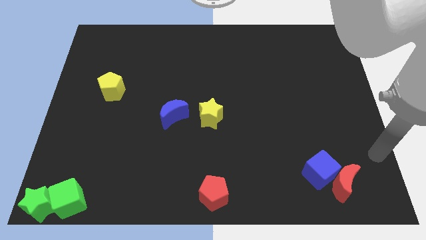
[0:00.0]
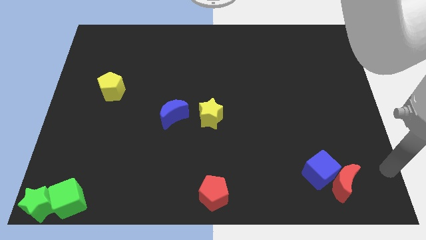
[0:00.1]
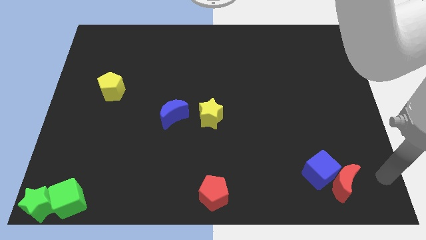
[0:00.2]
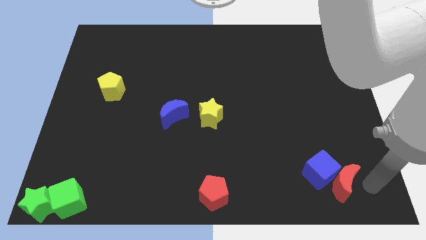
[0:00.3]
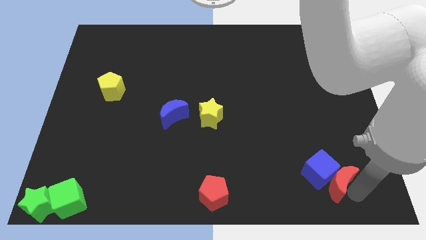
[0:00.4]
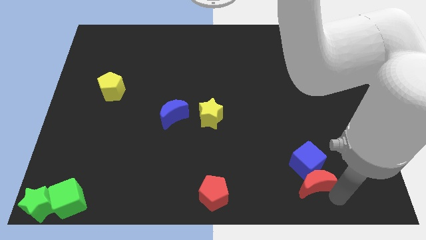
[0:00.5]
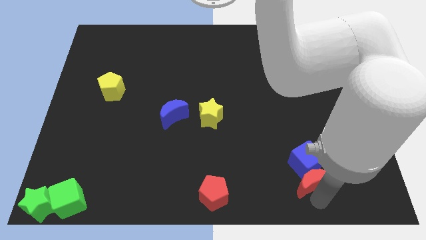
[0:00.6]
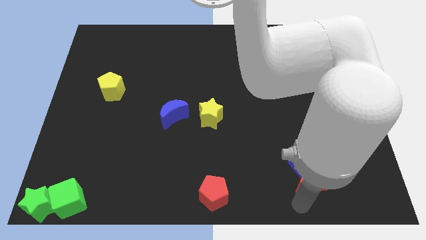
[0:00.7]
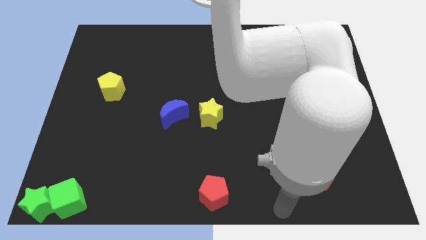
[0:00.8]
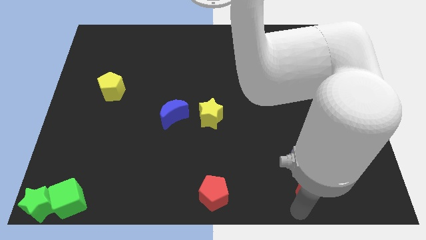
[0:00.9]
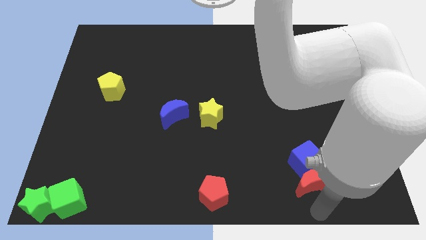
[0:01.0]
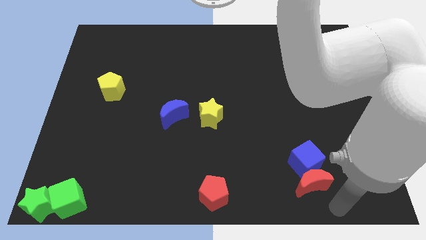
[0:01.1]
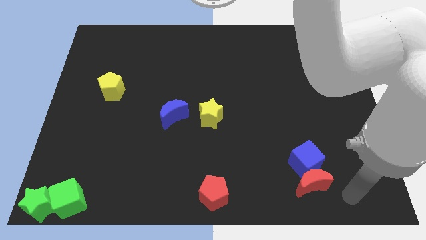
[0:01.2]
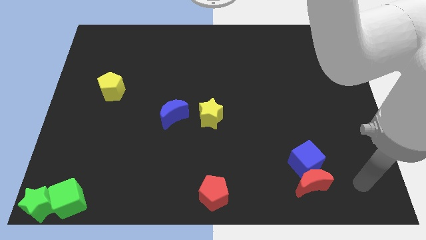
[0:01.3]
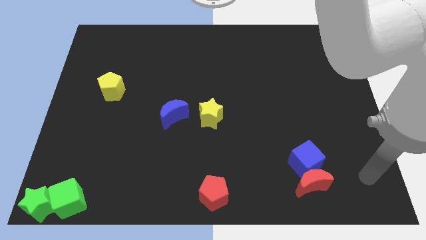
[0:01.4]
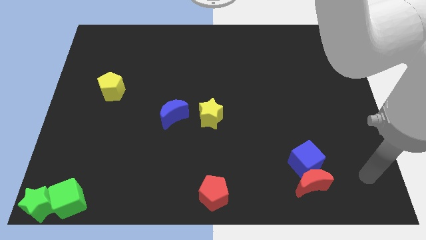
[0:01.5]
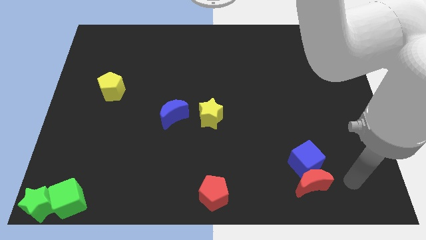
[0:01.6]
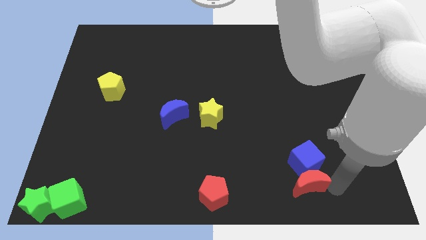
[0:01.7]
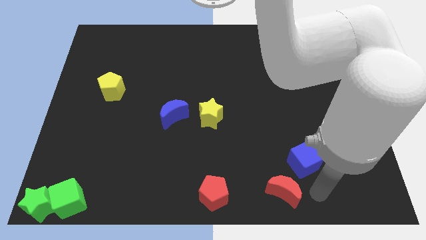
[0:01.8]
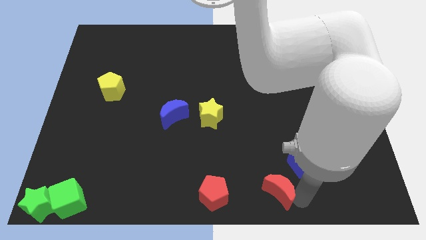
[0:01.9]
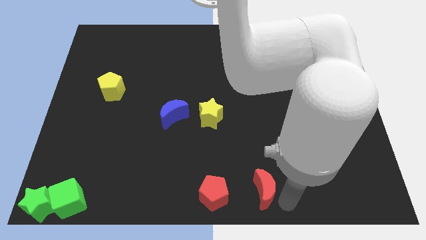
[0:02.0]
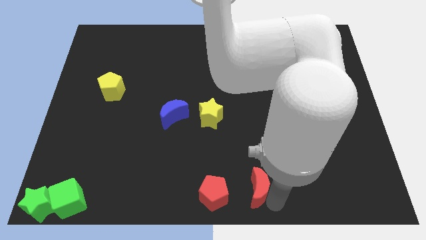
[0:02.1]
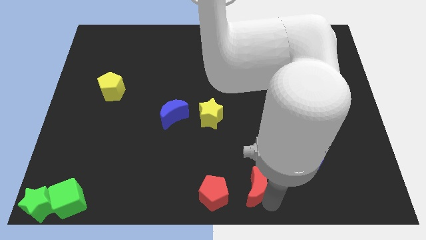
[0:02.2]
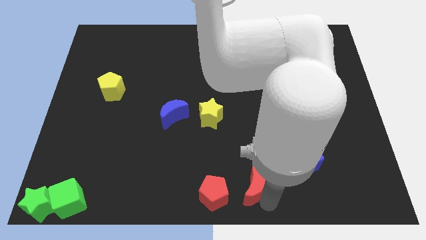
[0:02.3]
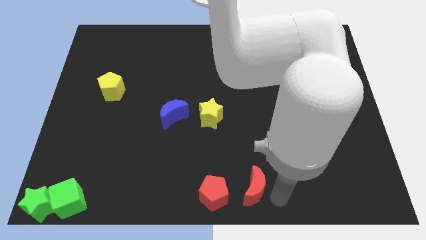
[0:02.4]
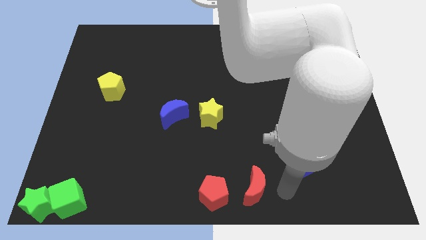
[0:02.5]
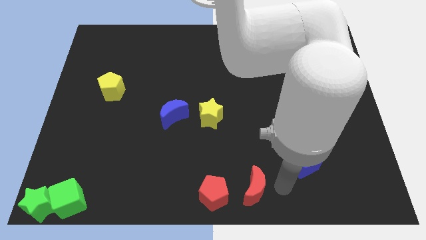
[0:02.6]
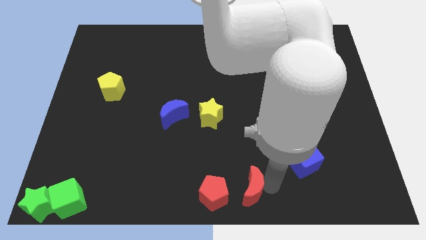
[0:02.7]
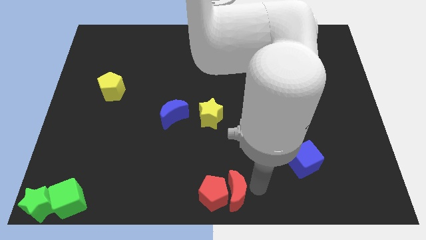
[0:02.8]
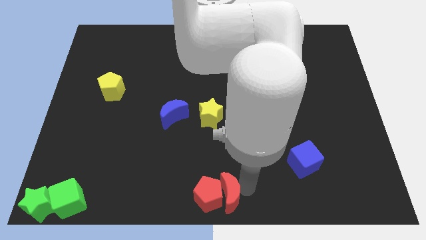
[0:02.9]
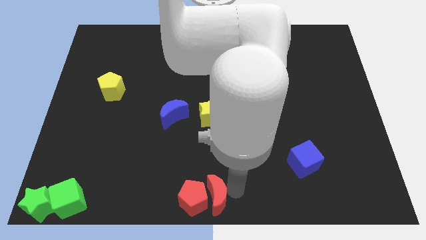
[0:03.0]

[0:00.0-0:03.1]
move the red crescent into the red pentagon

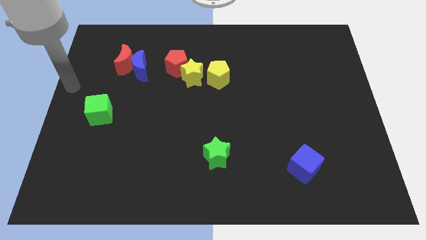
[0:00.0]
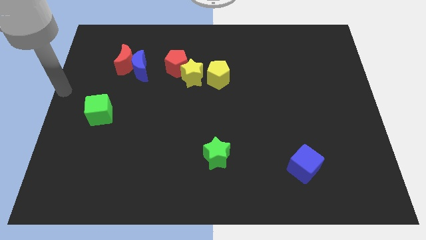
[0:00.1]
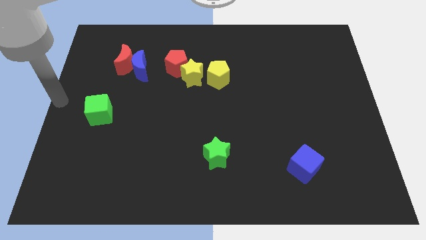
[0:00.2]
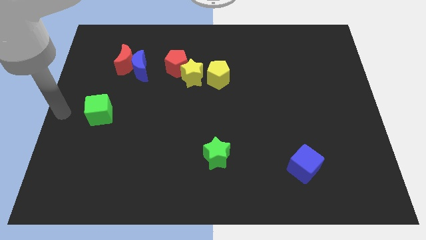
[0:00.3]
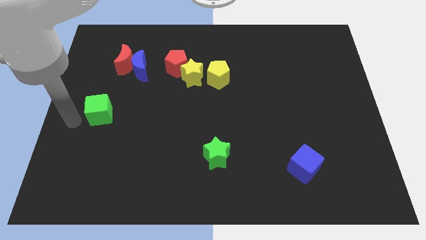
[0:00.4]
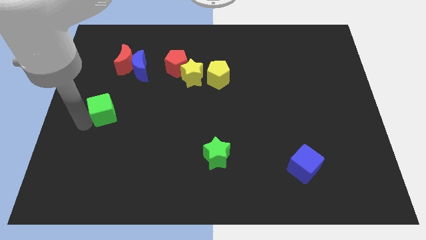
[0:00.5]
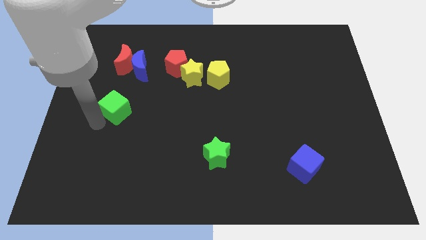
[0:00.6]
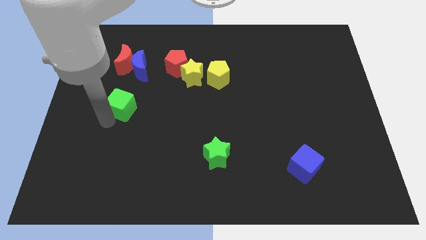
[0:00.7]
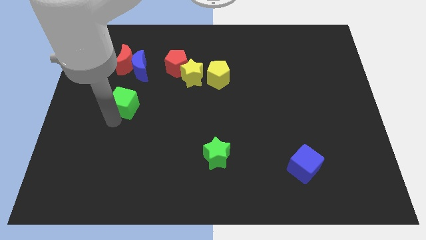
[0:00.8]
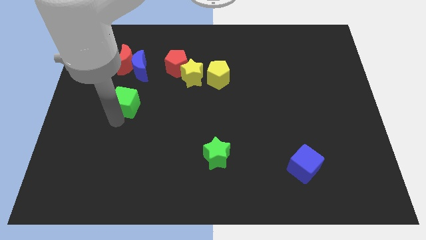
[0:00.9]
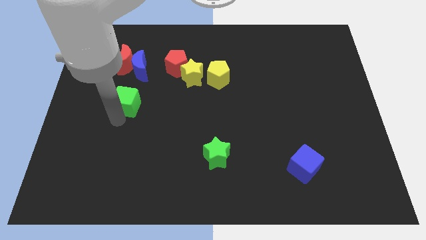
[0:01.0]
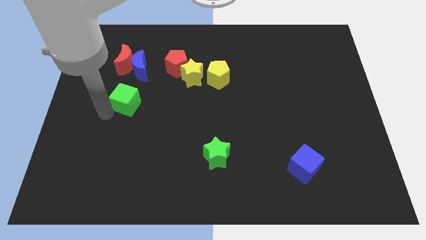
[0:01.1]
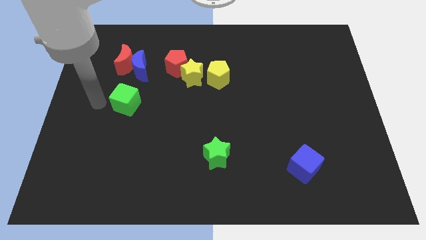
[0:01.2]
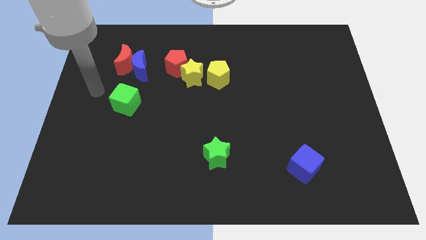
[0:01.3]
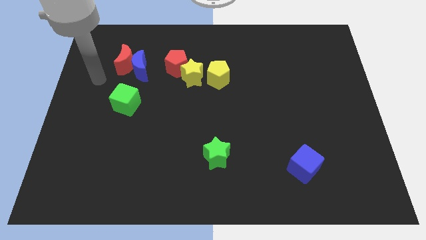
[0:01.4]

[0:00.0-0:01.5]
place the green cube below the blue crescent

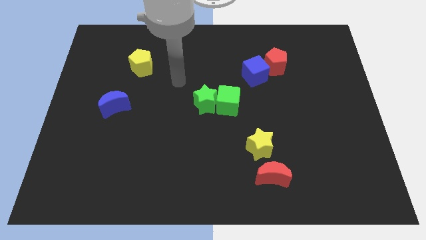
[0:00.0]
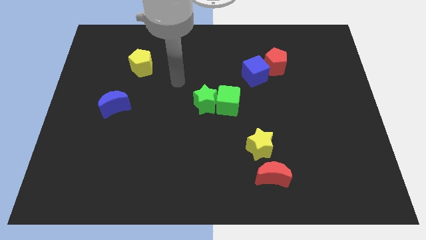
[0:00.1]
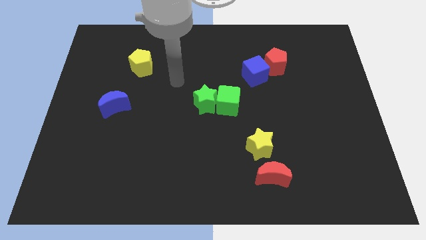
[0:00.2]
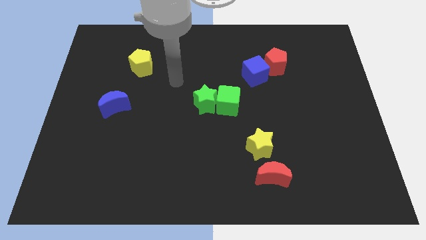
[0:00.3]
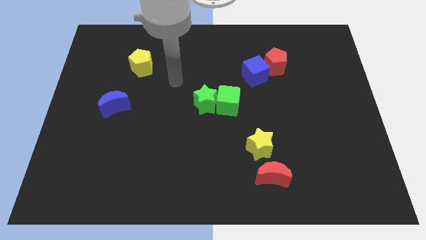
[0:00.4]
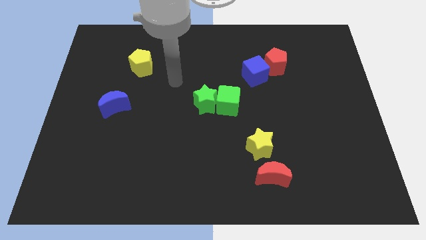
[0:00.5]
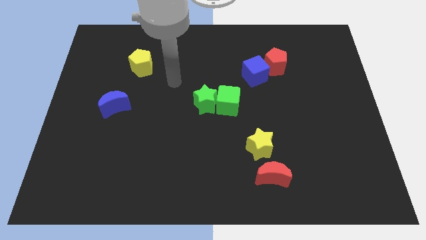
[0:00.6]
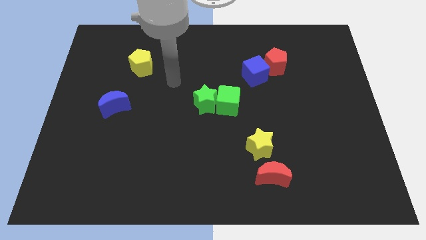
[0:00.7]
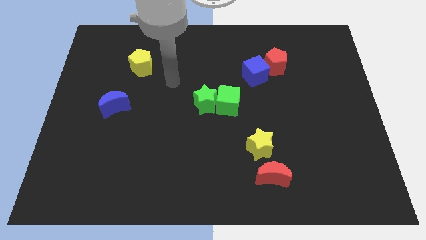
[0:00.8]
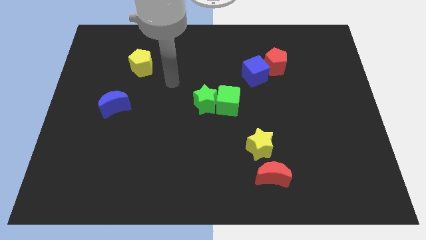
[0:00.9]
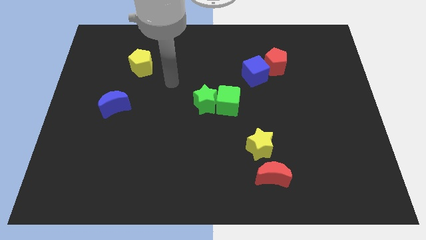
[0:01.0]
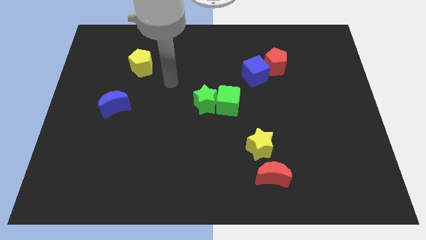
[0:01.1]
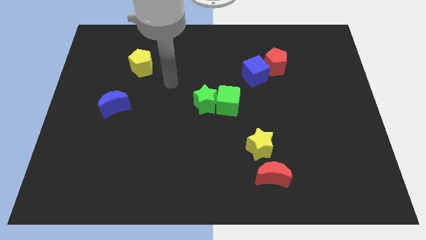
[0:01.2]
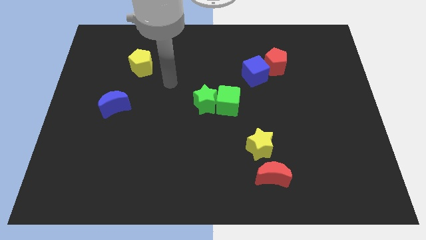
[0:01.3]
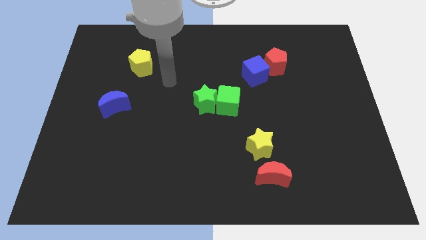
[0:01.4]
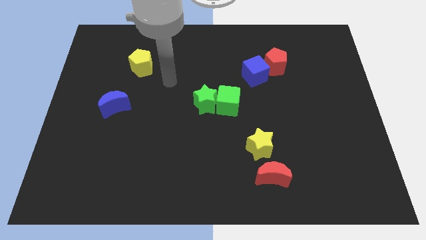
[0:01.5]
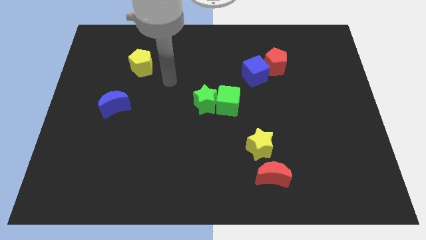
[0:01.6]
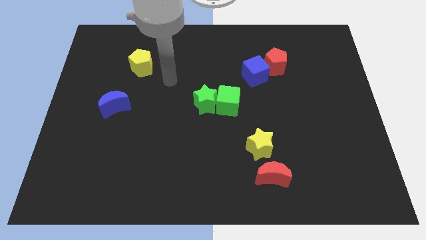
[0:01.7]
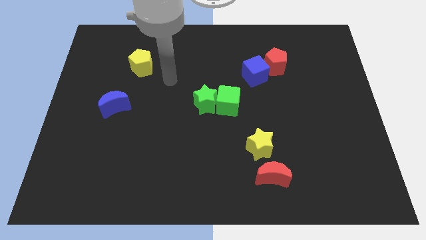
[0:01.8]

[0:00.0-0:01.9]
point the arm in between the green star and the yellow pentagon

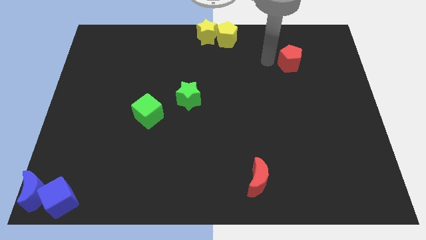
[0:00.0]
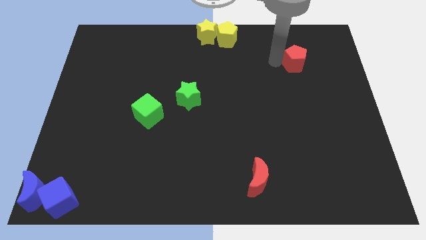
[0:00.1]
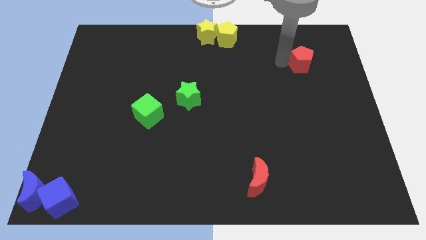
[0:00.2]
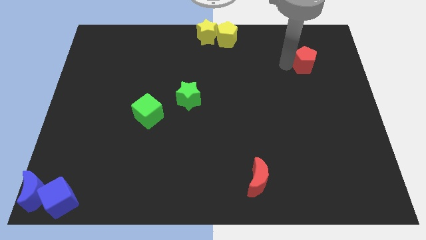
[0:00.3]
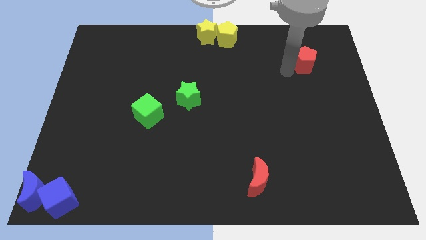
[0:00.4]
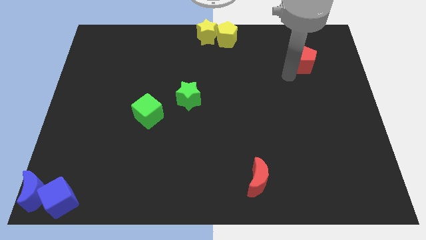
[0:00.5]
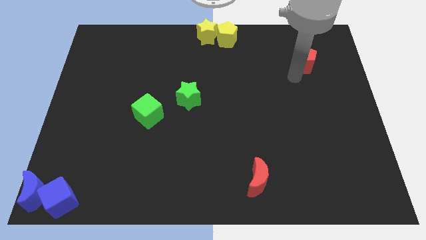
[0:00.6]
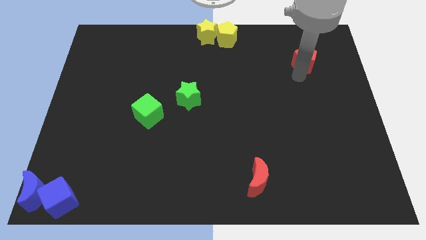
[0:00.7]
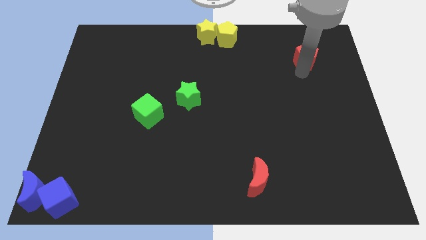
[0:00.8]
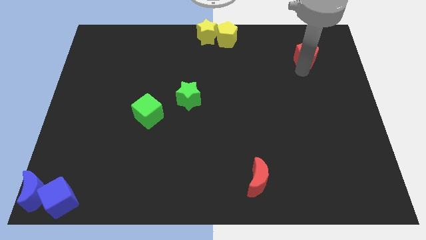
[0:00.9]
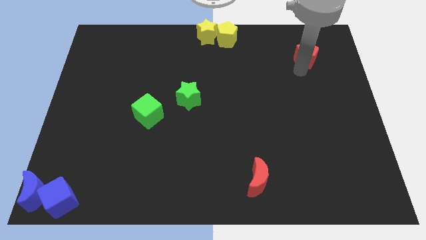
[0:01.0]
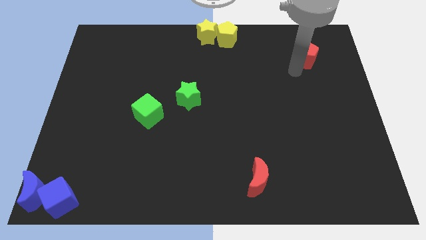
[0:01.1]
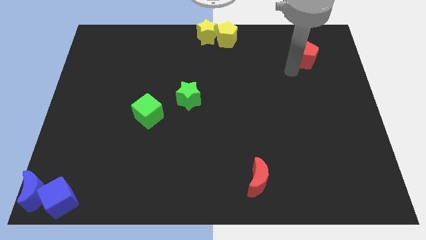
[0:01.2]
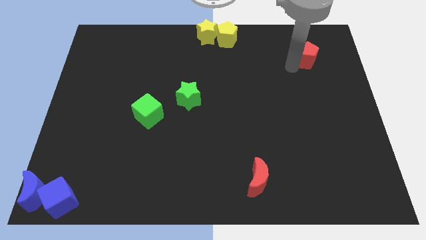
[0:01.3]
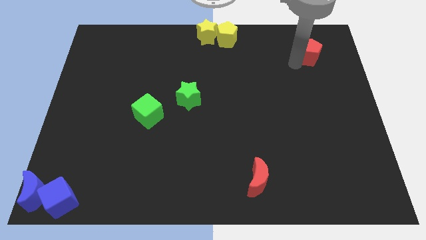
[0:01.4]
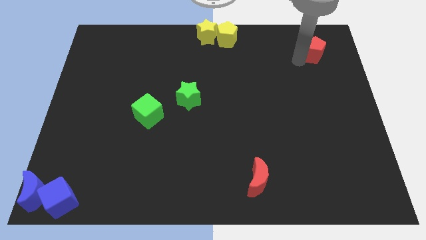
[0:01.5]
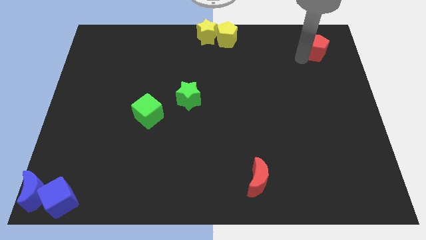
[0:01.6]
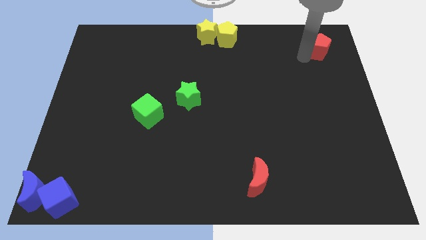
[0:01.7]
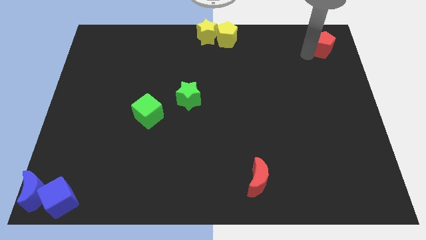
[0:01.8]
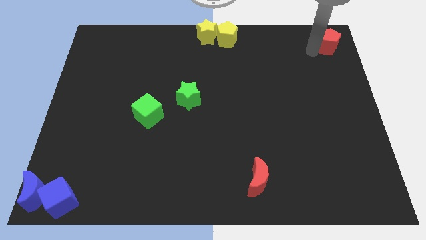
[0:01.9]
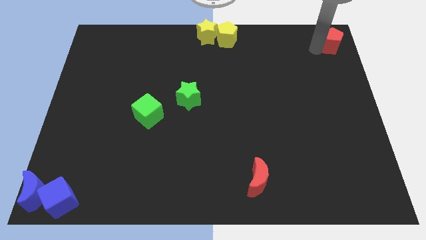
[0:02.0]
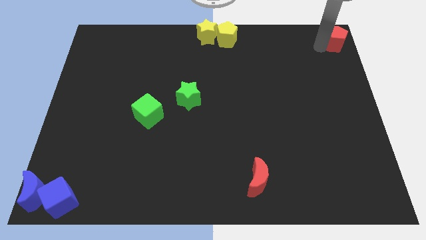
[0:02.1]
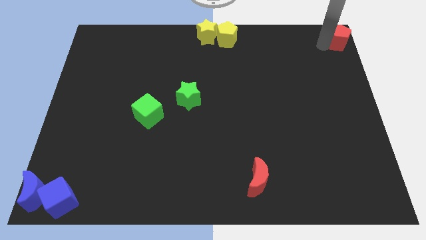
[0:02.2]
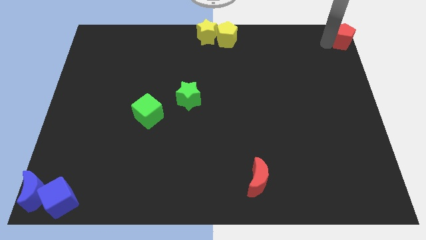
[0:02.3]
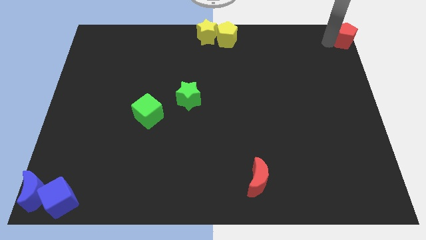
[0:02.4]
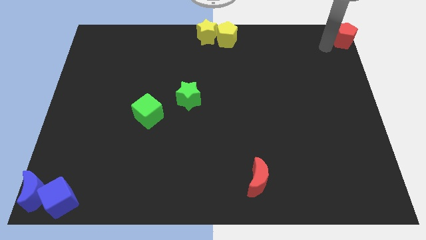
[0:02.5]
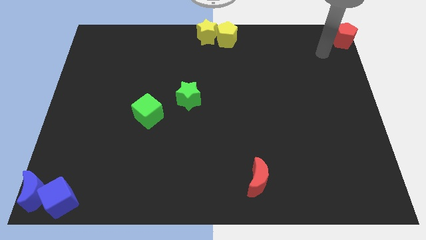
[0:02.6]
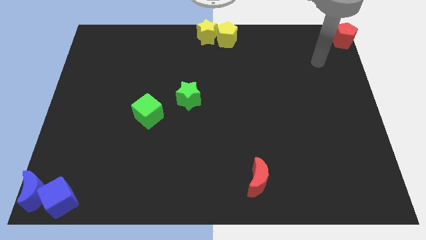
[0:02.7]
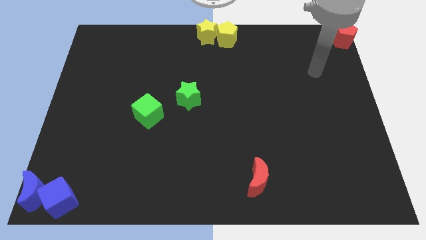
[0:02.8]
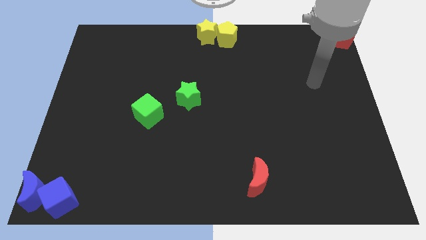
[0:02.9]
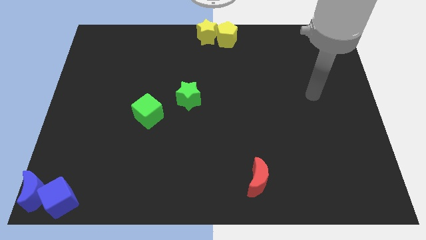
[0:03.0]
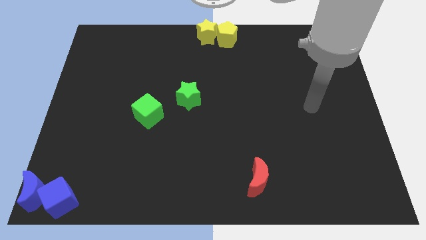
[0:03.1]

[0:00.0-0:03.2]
move the red pentagon to the top right corner of the board
